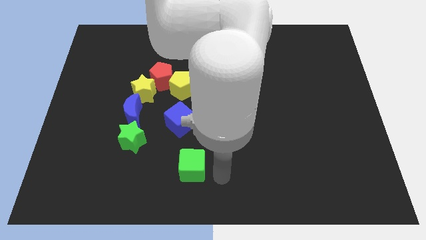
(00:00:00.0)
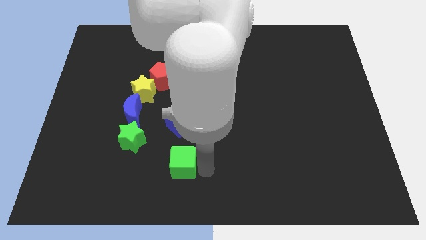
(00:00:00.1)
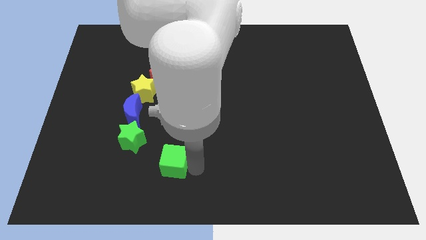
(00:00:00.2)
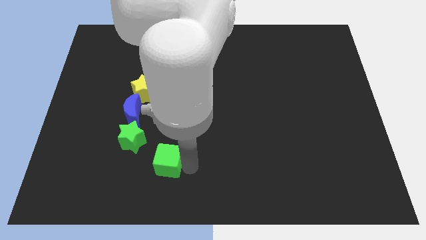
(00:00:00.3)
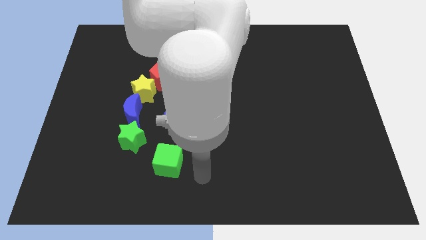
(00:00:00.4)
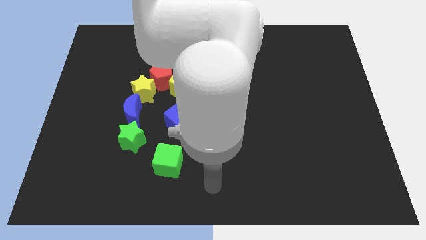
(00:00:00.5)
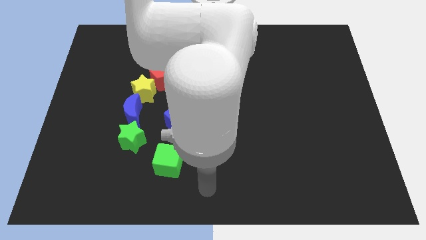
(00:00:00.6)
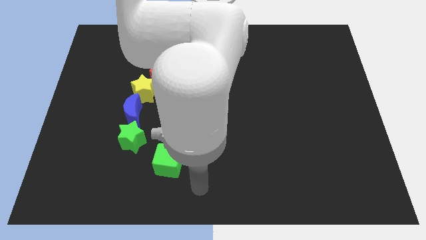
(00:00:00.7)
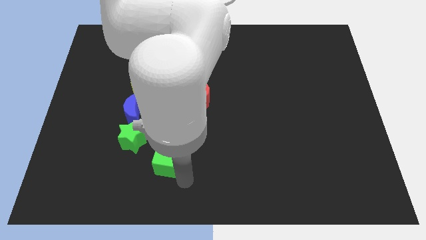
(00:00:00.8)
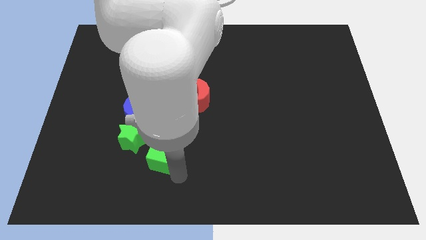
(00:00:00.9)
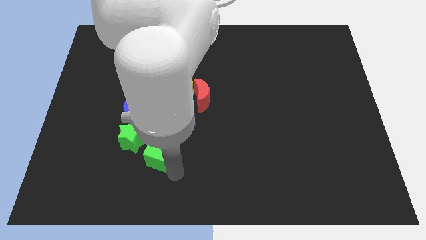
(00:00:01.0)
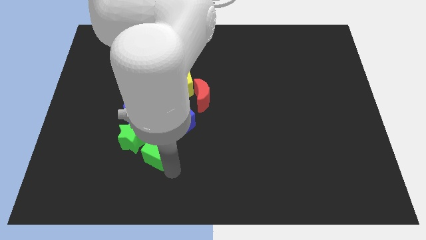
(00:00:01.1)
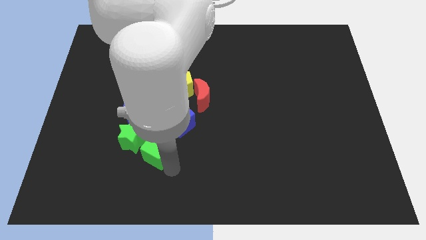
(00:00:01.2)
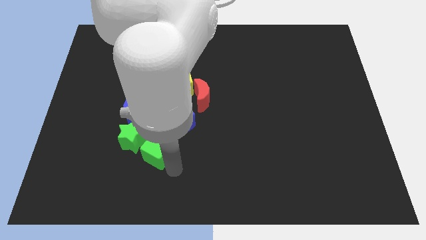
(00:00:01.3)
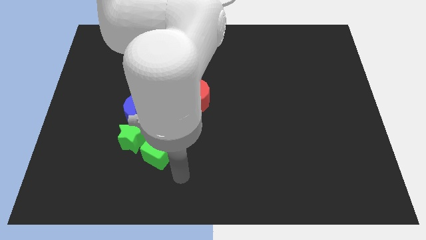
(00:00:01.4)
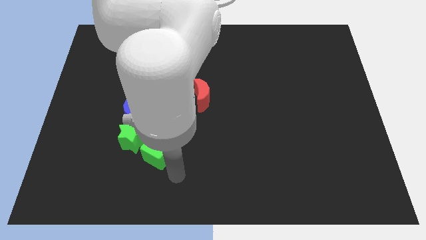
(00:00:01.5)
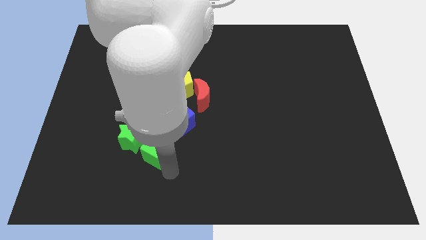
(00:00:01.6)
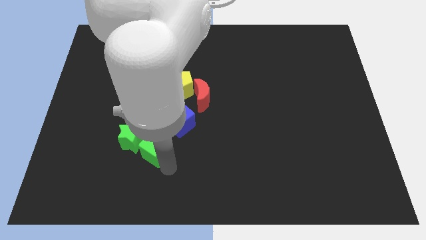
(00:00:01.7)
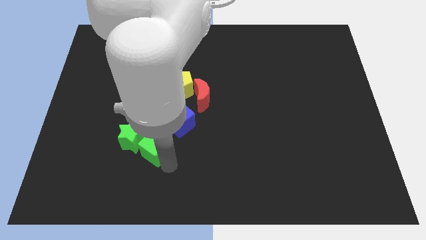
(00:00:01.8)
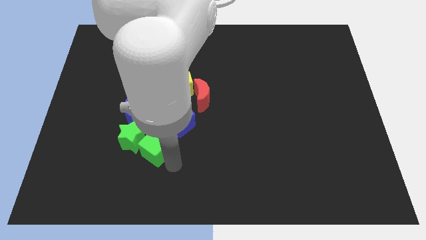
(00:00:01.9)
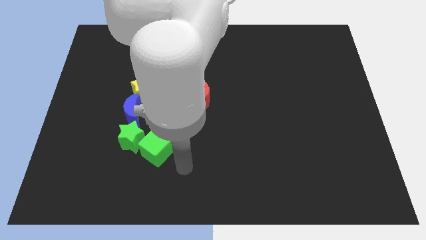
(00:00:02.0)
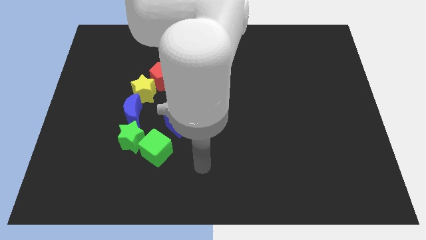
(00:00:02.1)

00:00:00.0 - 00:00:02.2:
push green cube into green star

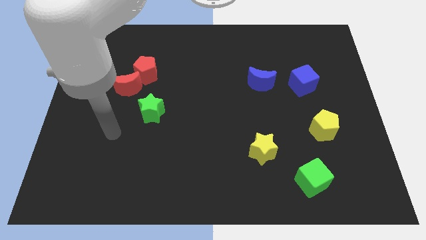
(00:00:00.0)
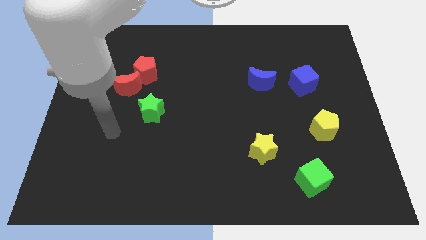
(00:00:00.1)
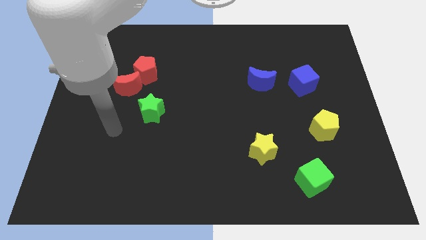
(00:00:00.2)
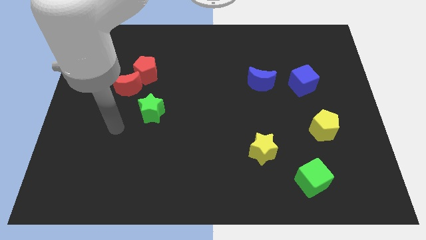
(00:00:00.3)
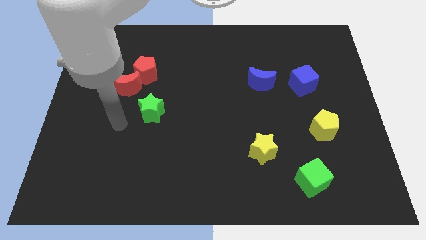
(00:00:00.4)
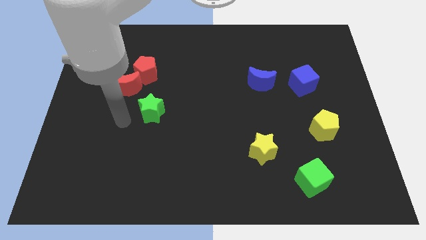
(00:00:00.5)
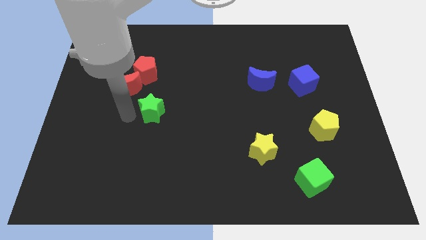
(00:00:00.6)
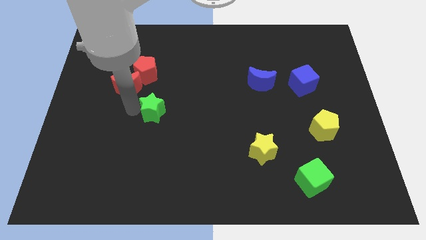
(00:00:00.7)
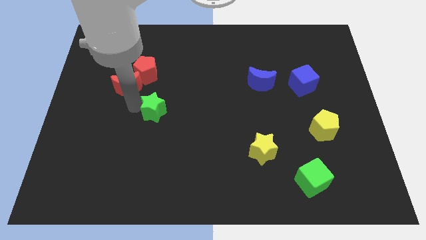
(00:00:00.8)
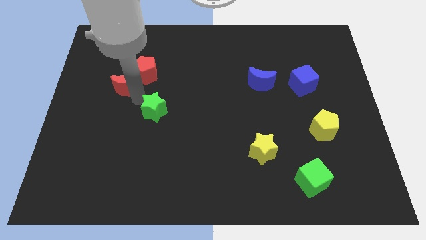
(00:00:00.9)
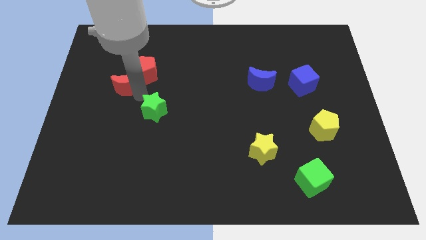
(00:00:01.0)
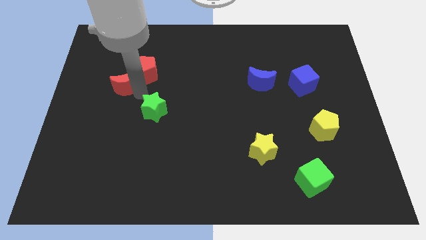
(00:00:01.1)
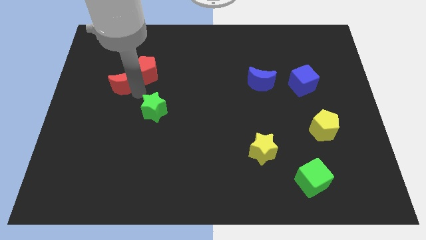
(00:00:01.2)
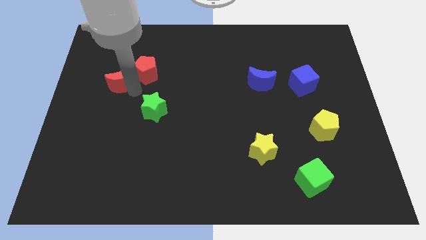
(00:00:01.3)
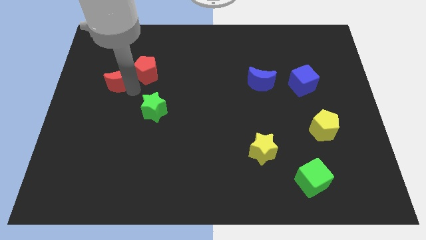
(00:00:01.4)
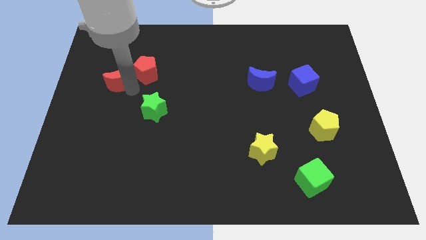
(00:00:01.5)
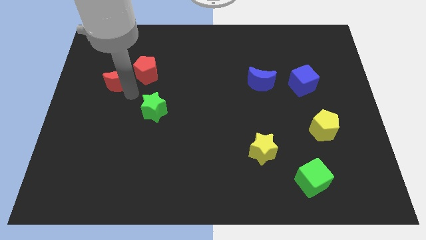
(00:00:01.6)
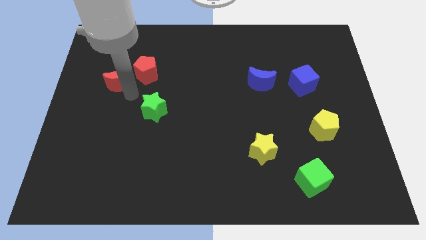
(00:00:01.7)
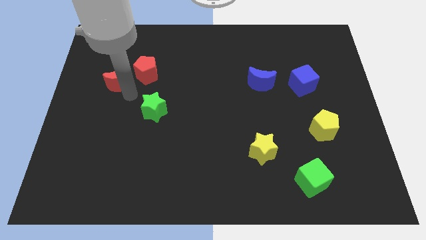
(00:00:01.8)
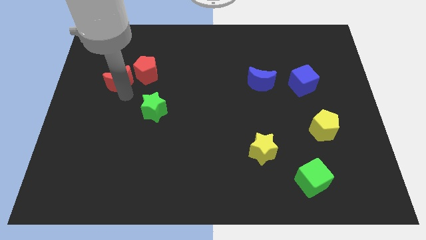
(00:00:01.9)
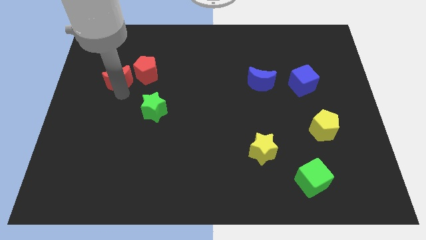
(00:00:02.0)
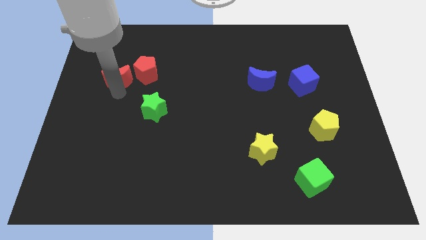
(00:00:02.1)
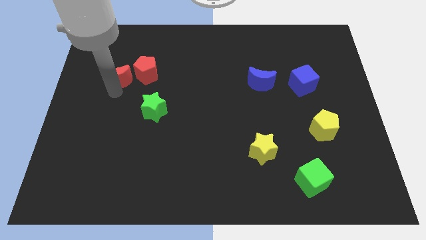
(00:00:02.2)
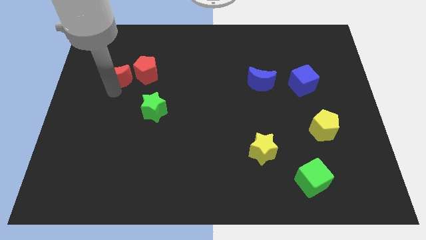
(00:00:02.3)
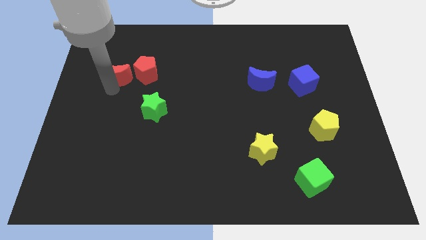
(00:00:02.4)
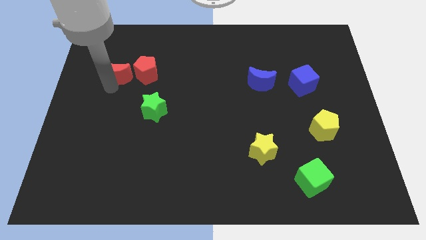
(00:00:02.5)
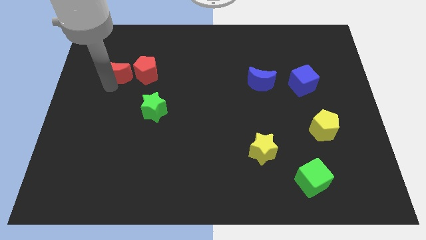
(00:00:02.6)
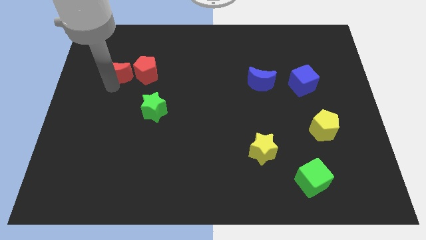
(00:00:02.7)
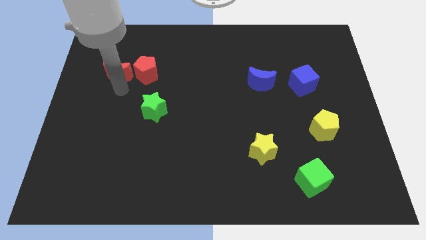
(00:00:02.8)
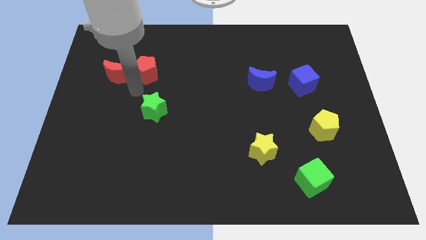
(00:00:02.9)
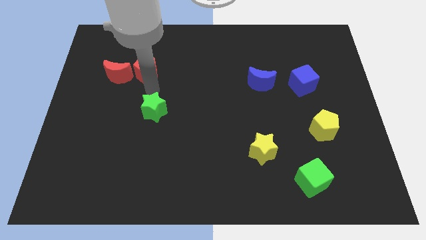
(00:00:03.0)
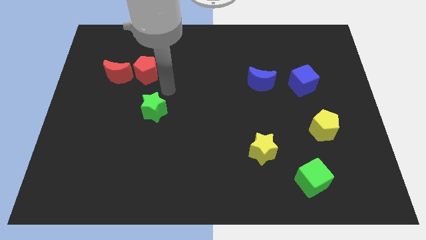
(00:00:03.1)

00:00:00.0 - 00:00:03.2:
push the red moon to the left of the red pentagon

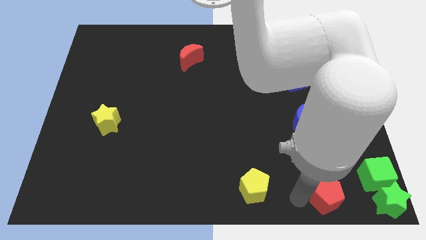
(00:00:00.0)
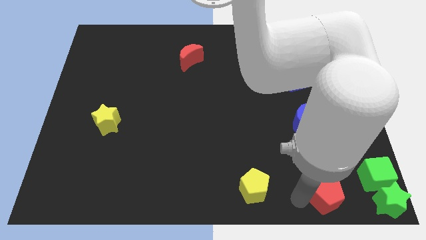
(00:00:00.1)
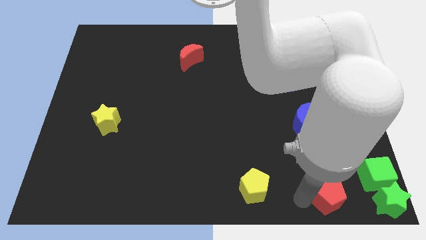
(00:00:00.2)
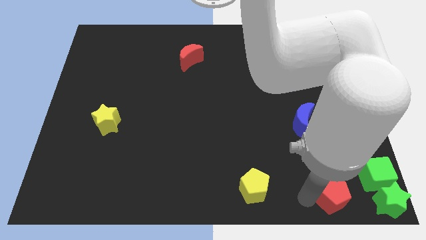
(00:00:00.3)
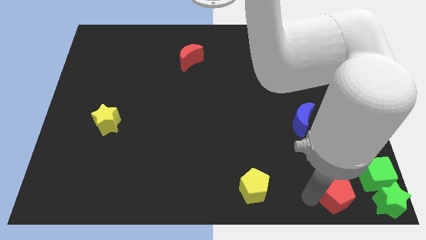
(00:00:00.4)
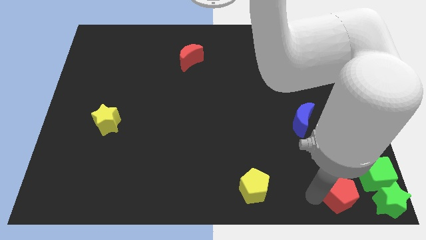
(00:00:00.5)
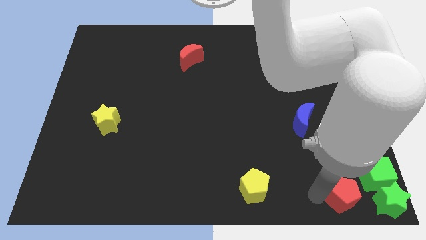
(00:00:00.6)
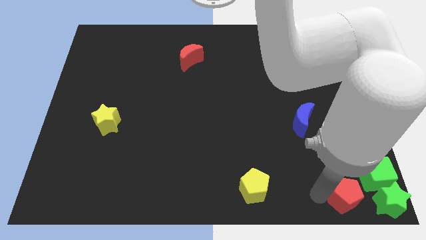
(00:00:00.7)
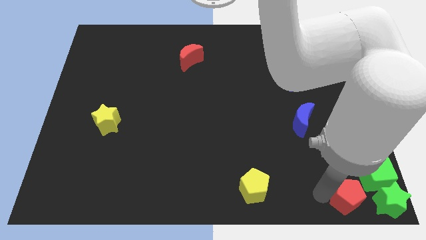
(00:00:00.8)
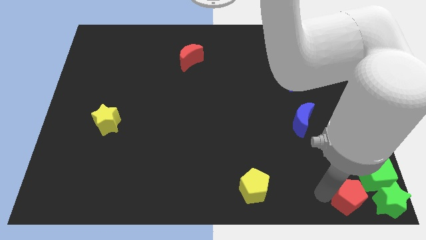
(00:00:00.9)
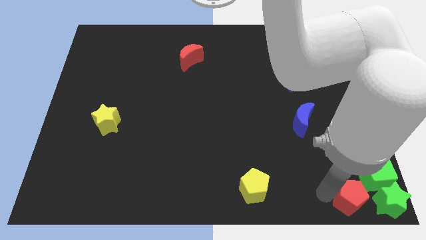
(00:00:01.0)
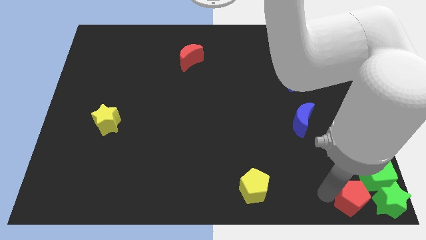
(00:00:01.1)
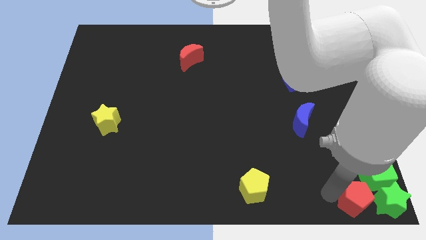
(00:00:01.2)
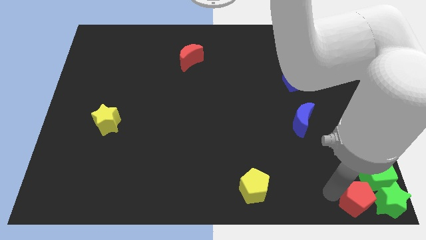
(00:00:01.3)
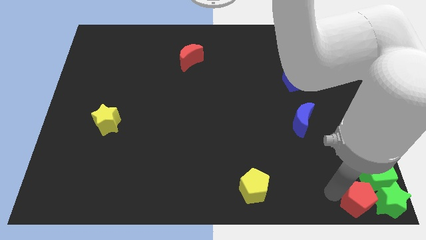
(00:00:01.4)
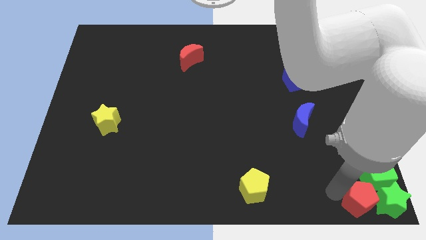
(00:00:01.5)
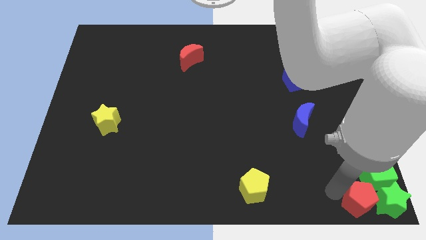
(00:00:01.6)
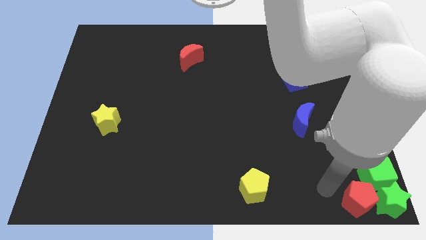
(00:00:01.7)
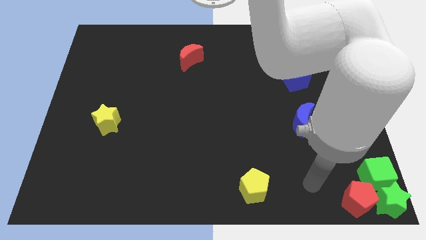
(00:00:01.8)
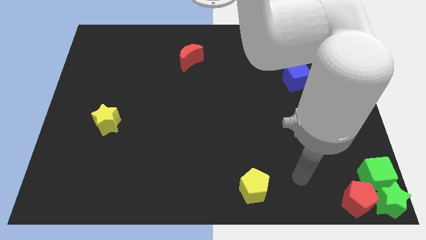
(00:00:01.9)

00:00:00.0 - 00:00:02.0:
move the red pentagon closer to the green star

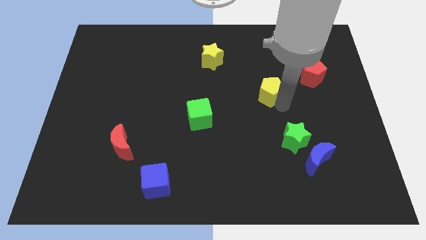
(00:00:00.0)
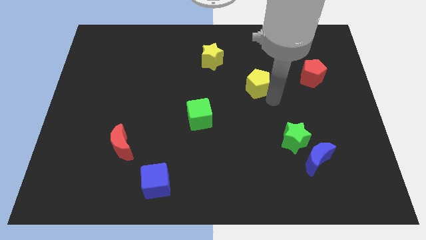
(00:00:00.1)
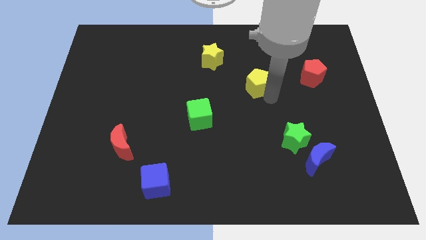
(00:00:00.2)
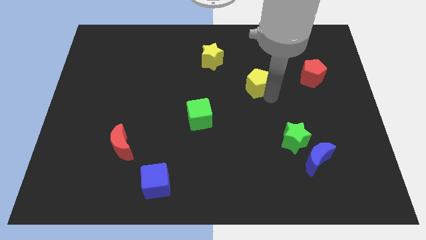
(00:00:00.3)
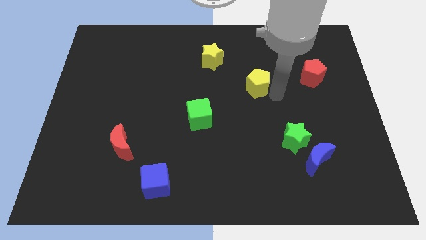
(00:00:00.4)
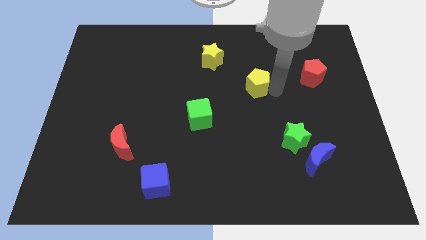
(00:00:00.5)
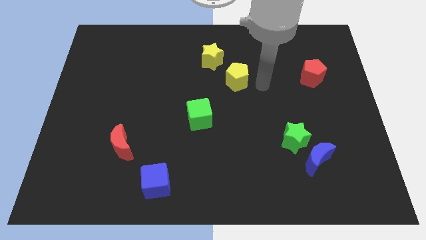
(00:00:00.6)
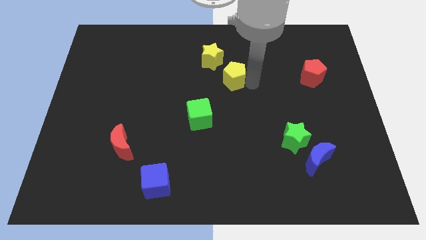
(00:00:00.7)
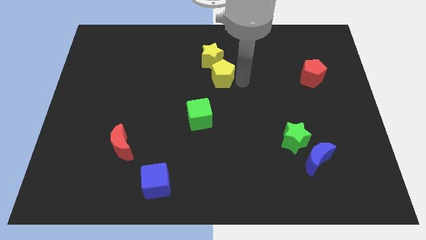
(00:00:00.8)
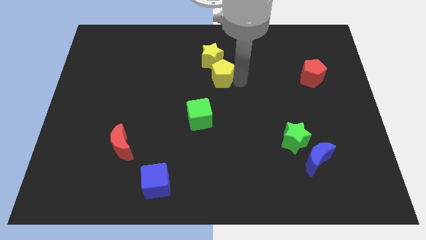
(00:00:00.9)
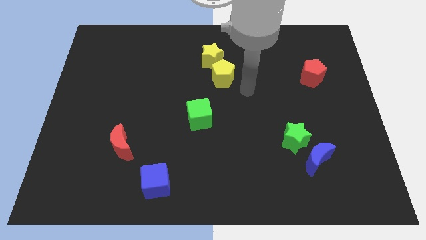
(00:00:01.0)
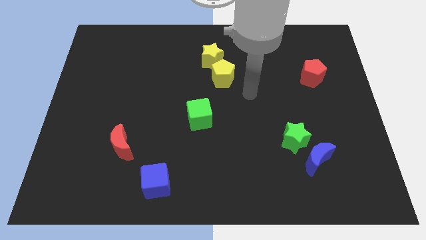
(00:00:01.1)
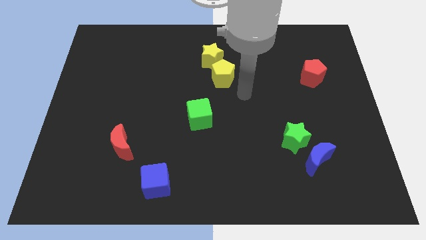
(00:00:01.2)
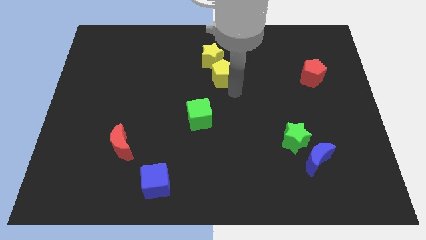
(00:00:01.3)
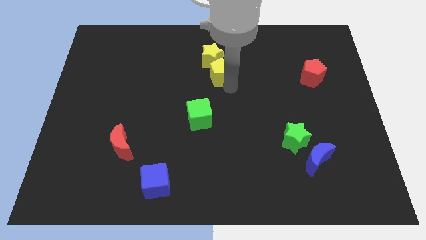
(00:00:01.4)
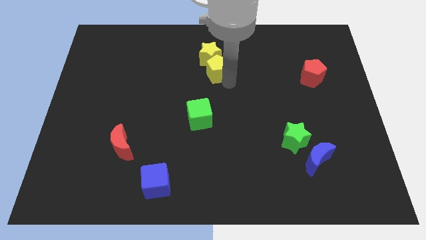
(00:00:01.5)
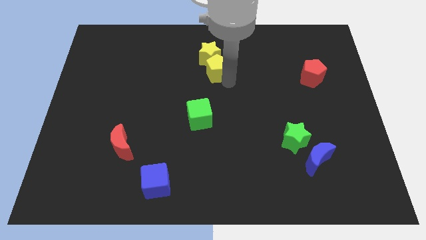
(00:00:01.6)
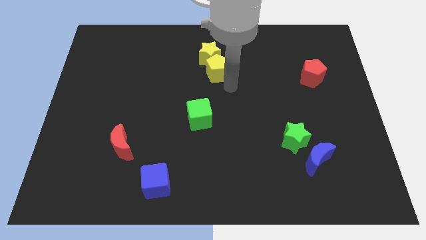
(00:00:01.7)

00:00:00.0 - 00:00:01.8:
move the yellow pentagon into the yellow star
